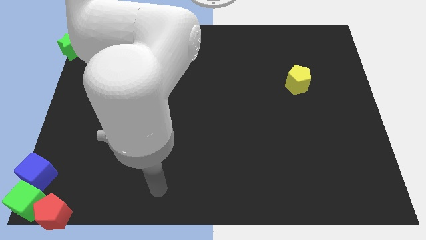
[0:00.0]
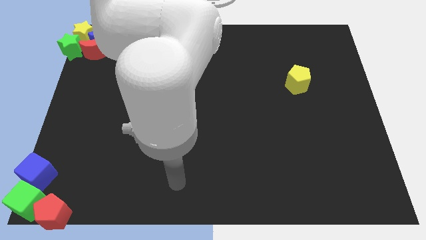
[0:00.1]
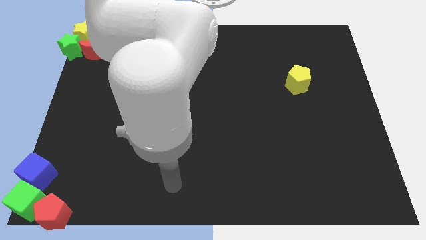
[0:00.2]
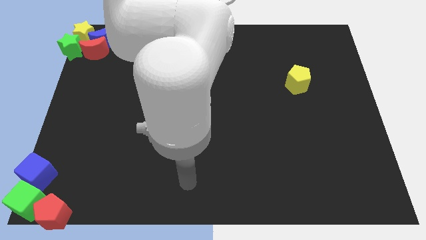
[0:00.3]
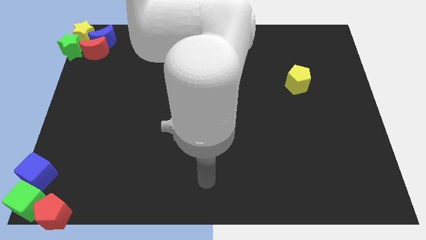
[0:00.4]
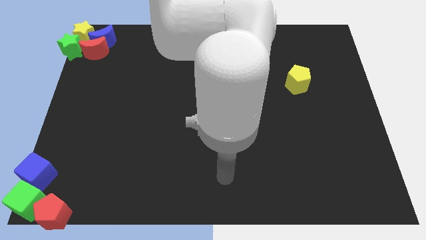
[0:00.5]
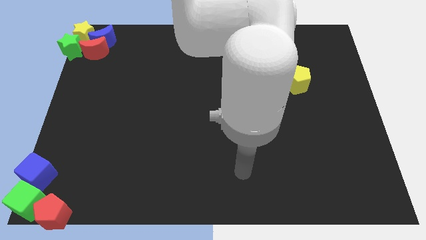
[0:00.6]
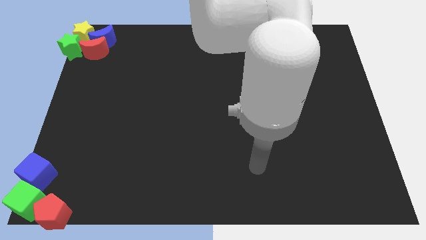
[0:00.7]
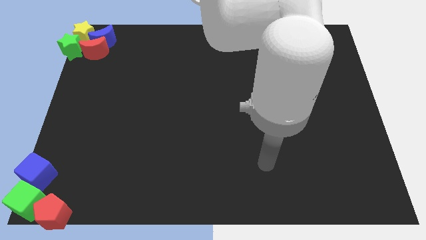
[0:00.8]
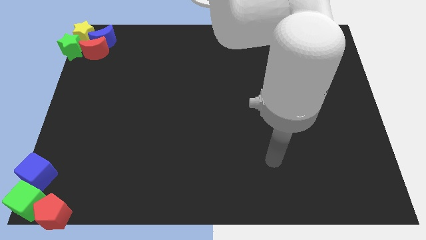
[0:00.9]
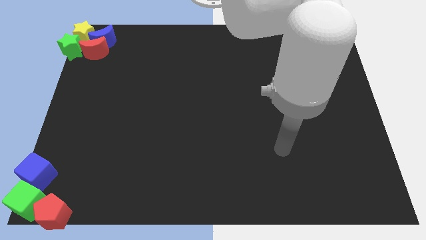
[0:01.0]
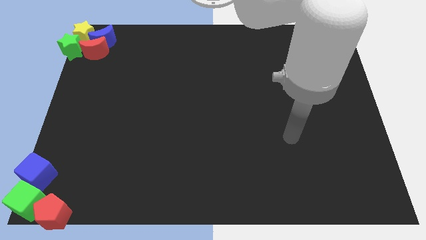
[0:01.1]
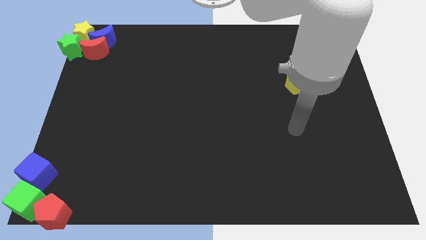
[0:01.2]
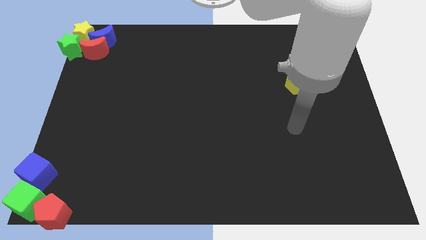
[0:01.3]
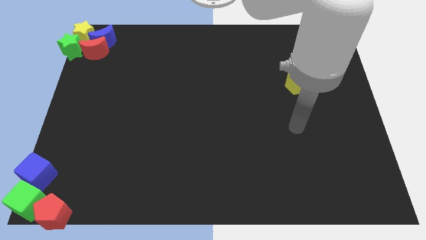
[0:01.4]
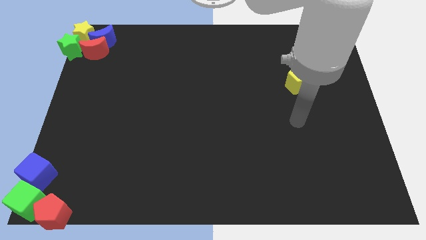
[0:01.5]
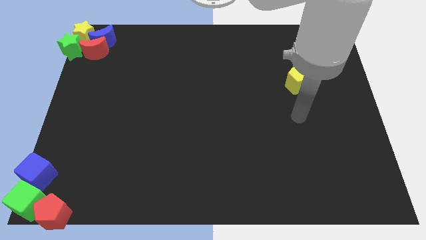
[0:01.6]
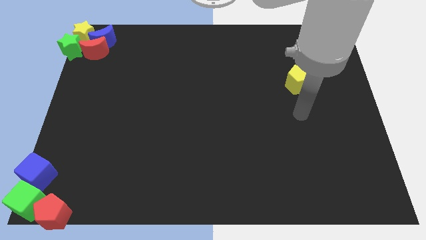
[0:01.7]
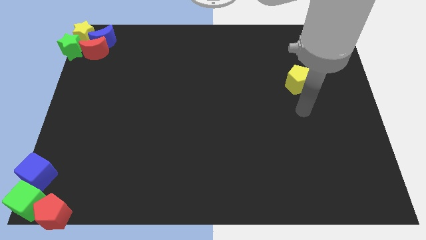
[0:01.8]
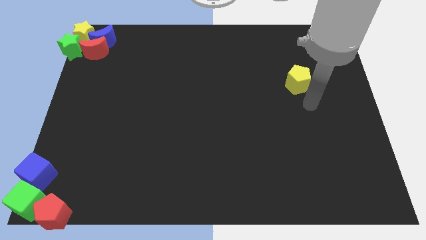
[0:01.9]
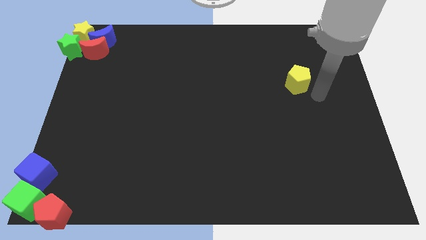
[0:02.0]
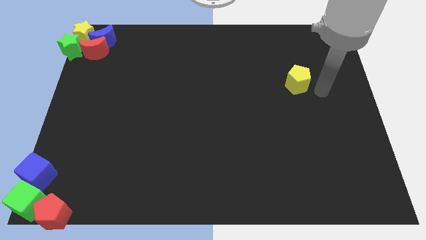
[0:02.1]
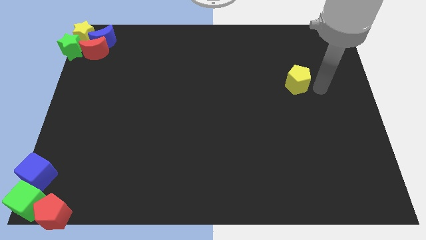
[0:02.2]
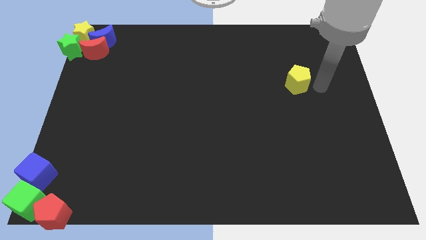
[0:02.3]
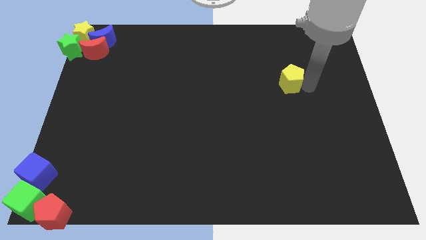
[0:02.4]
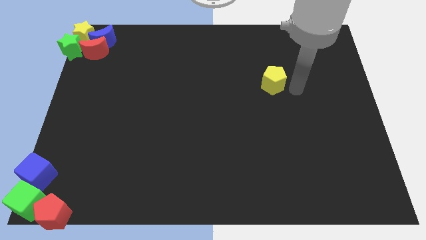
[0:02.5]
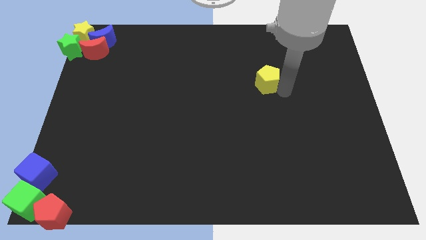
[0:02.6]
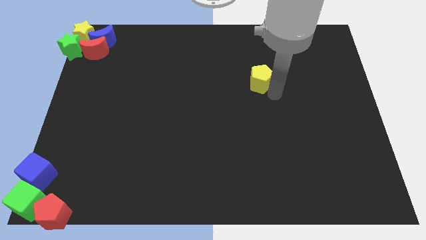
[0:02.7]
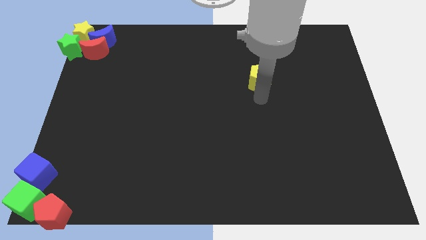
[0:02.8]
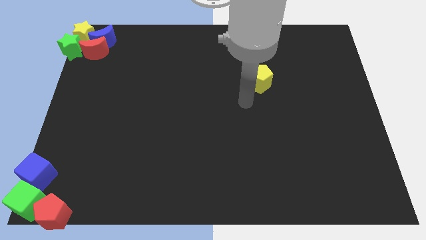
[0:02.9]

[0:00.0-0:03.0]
slightly push the yellow pentagon towards the left centre of board

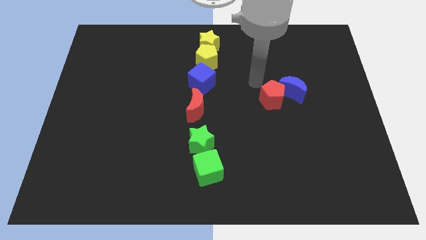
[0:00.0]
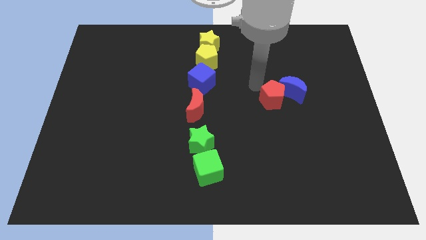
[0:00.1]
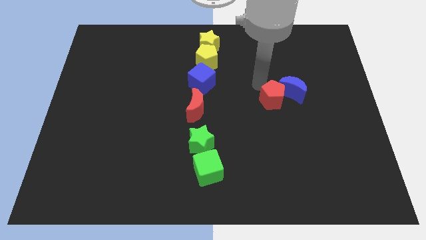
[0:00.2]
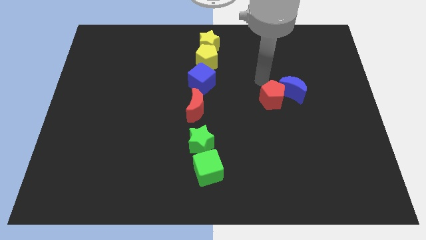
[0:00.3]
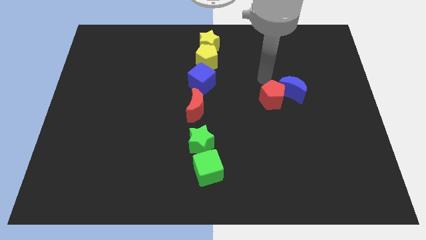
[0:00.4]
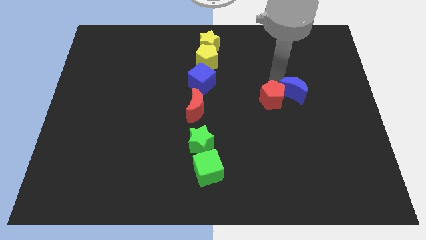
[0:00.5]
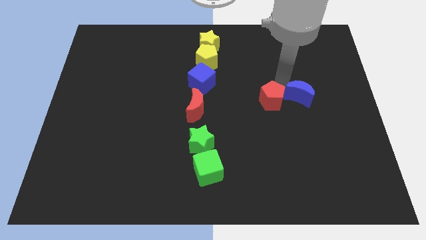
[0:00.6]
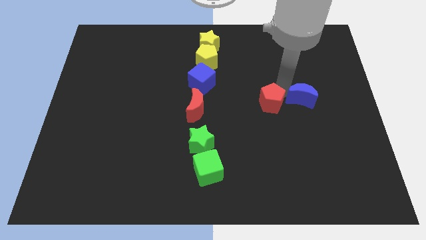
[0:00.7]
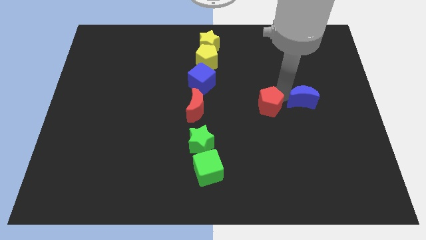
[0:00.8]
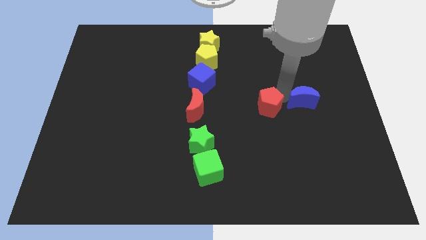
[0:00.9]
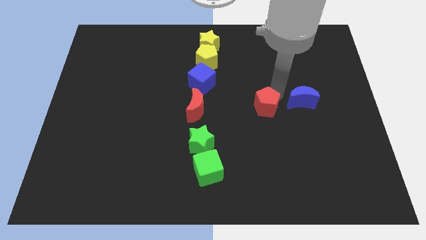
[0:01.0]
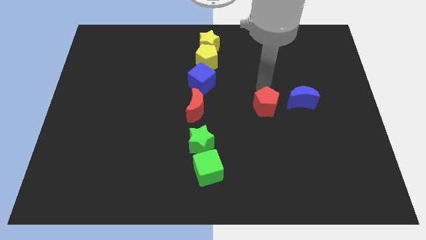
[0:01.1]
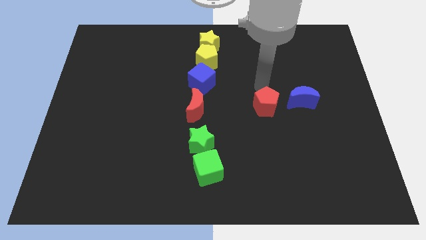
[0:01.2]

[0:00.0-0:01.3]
separate the red pentagon from the blue crescent

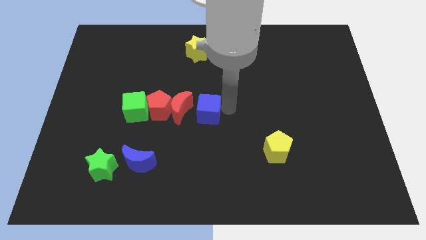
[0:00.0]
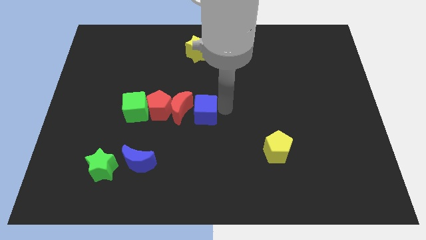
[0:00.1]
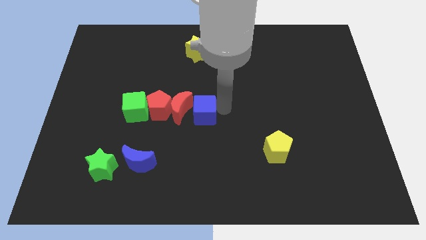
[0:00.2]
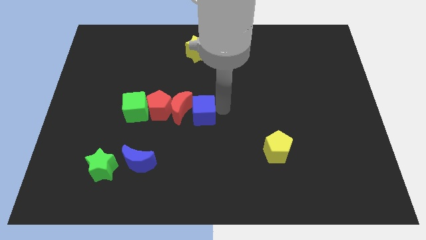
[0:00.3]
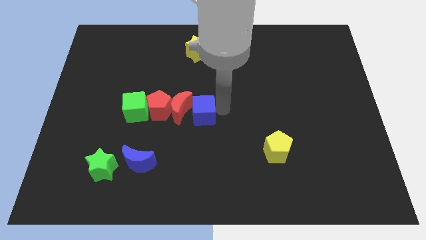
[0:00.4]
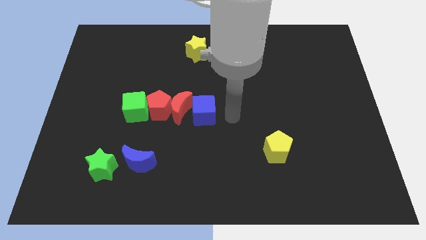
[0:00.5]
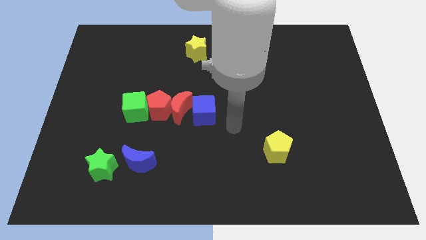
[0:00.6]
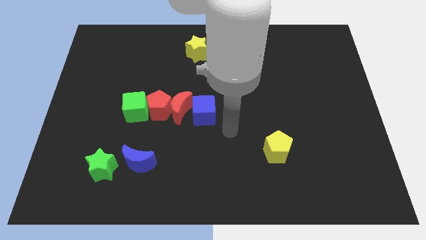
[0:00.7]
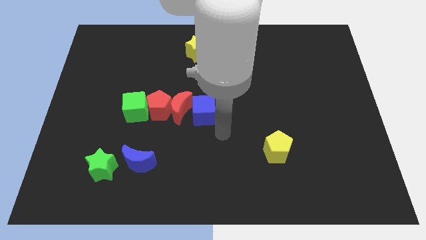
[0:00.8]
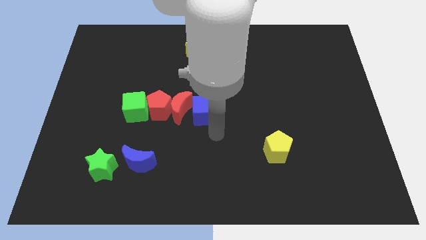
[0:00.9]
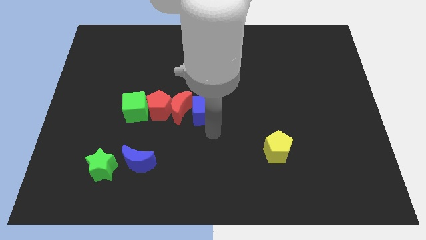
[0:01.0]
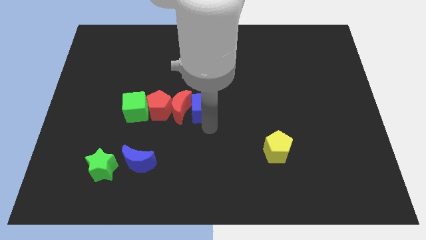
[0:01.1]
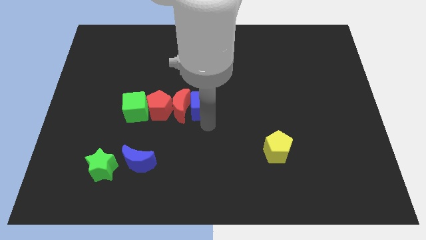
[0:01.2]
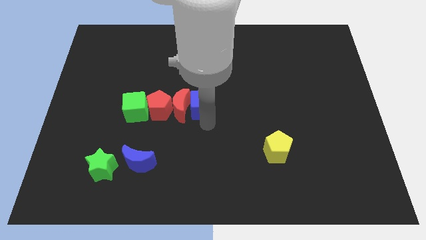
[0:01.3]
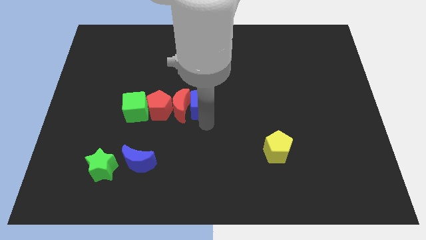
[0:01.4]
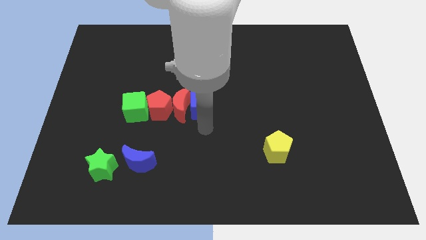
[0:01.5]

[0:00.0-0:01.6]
place the blue cube at the right side of the red moon

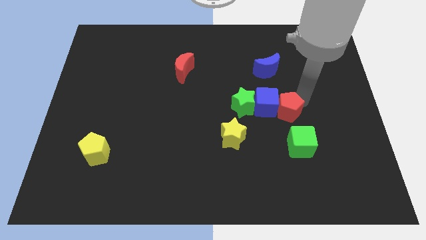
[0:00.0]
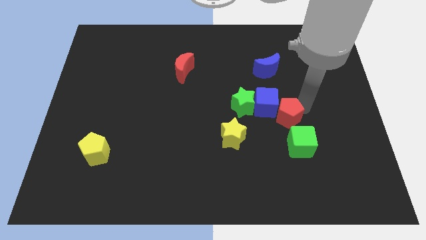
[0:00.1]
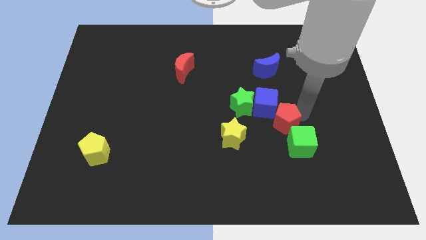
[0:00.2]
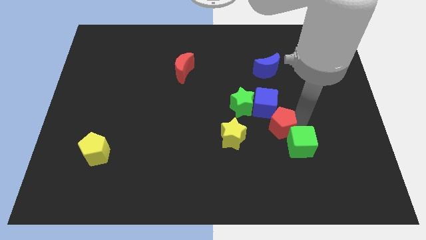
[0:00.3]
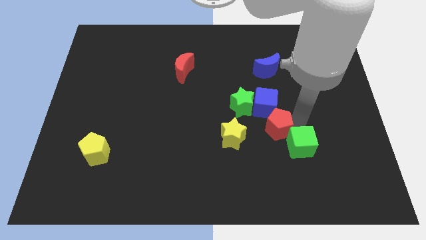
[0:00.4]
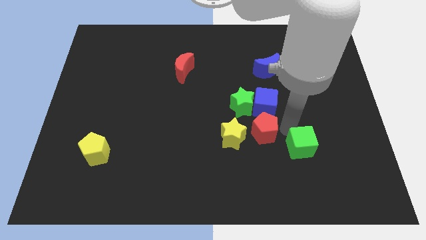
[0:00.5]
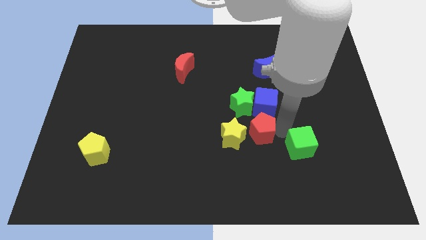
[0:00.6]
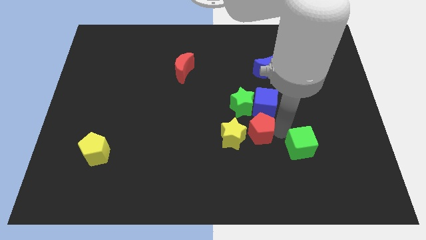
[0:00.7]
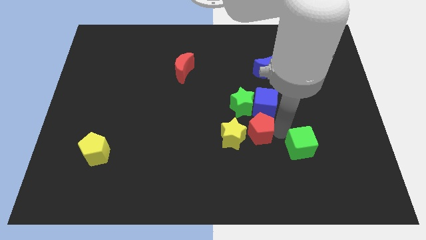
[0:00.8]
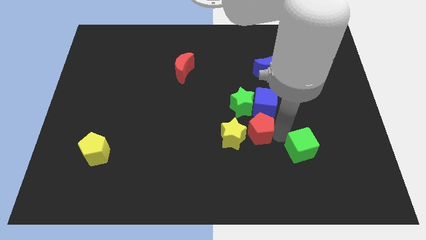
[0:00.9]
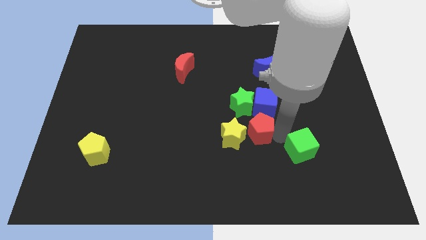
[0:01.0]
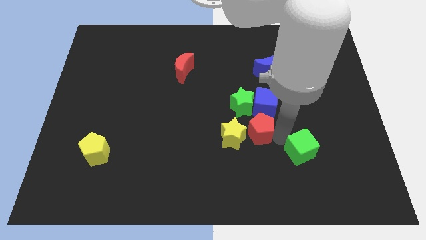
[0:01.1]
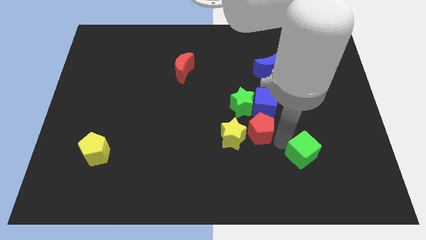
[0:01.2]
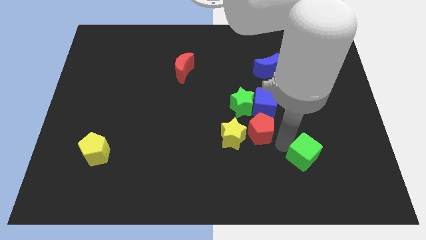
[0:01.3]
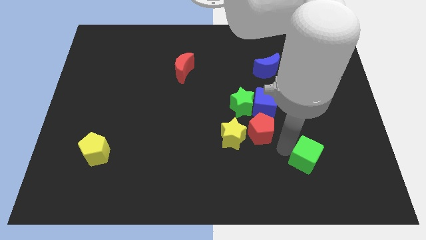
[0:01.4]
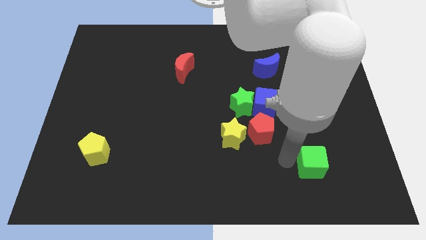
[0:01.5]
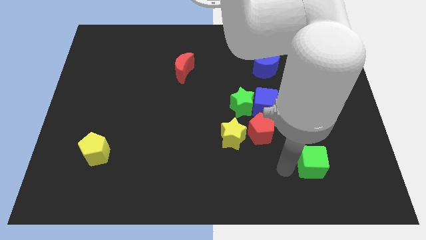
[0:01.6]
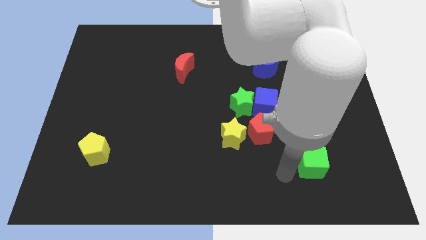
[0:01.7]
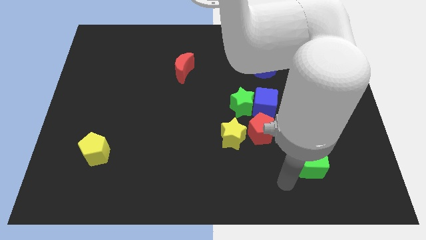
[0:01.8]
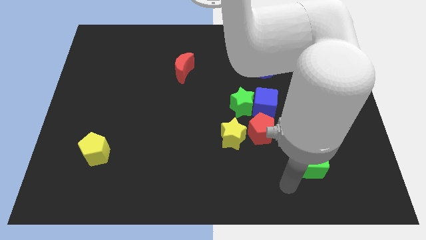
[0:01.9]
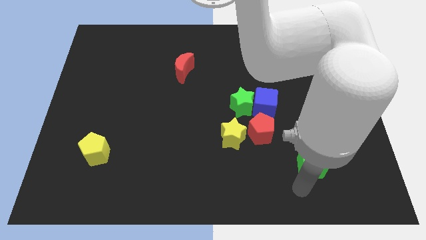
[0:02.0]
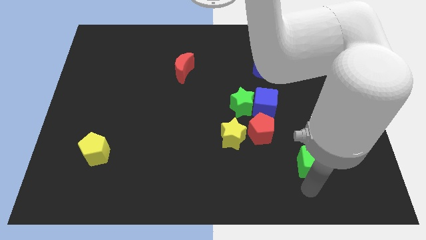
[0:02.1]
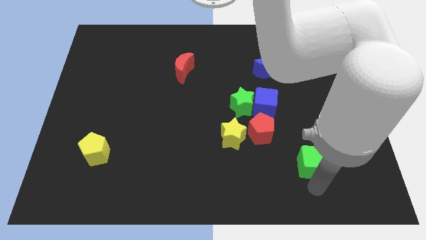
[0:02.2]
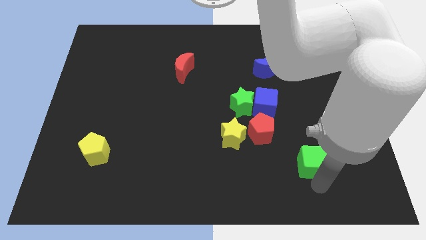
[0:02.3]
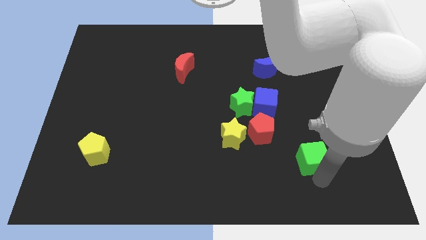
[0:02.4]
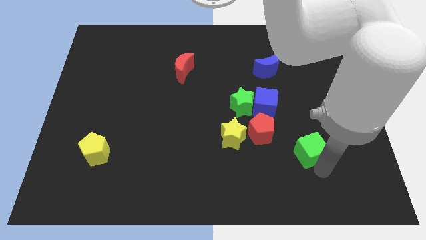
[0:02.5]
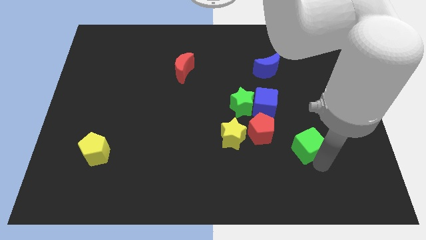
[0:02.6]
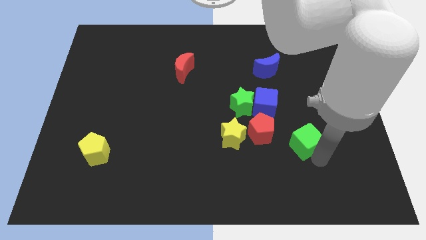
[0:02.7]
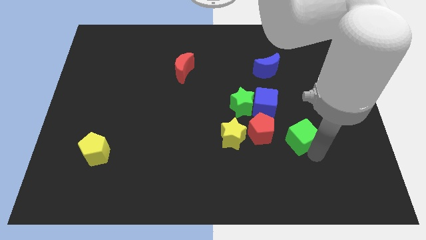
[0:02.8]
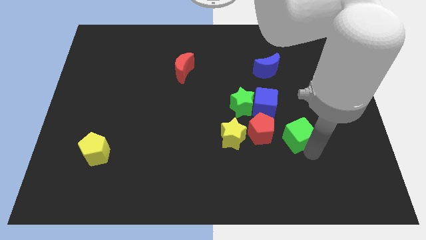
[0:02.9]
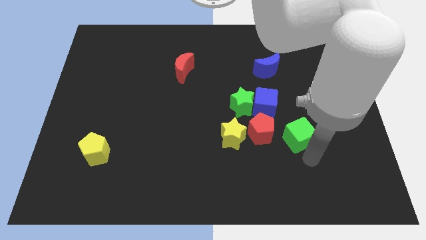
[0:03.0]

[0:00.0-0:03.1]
separate red pentagon and green cube
